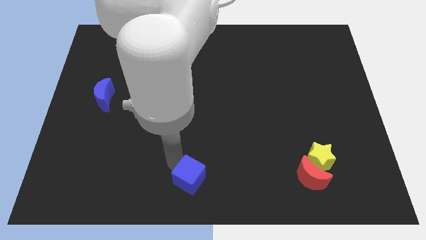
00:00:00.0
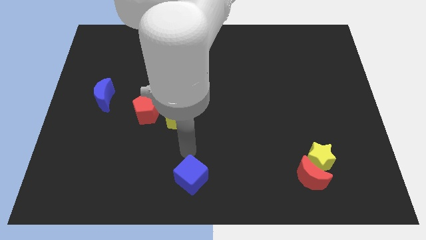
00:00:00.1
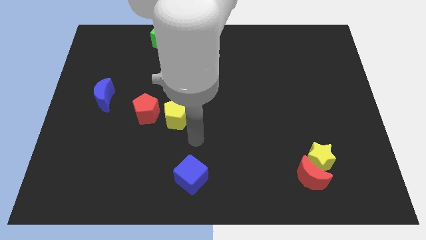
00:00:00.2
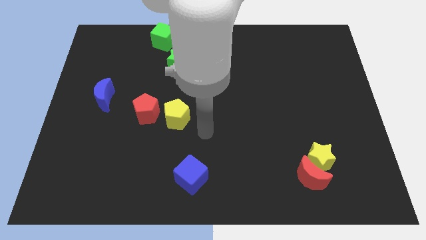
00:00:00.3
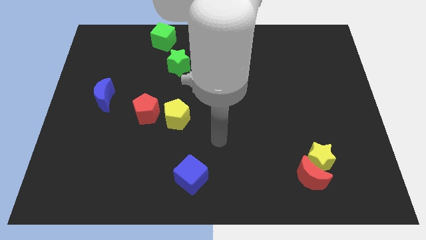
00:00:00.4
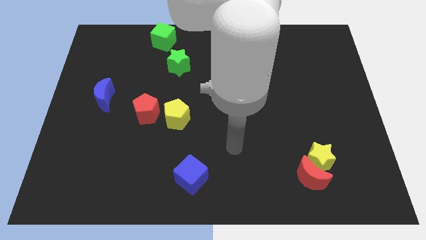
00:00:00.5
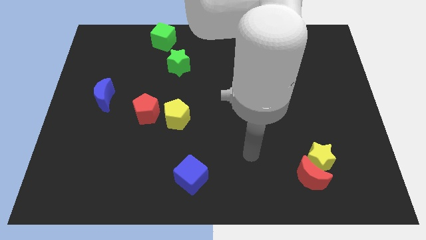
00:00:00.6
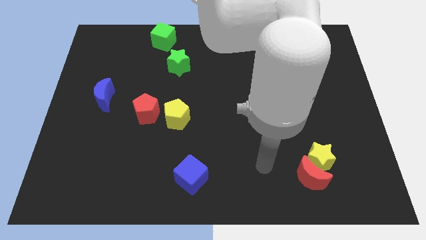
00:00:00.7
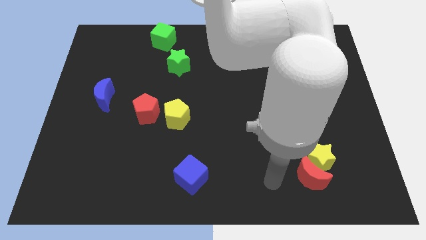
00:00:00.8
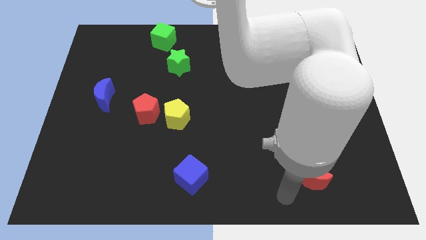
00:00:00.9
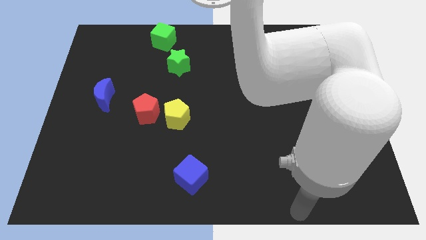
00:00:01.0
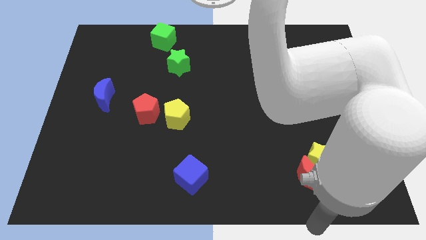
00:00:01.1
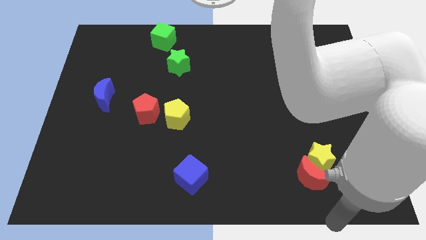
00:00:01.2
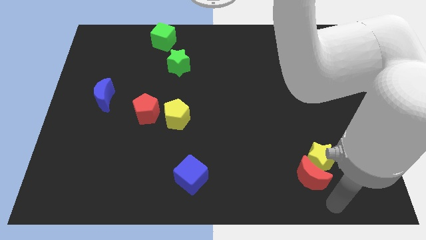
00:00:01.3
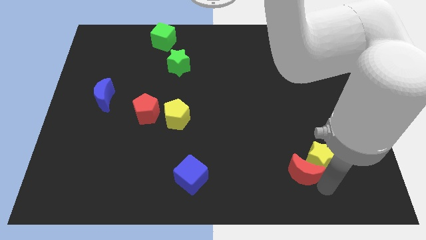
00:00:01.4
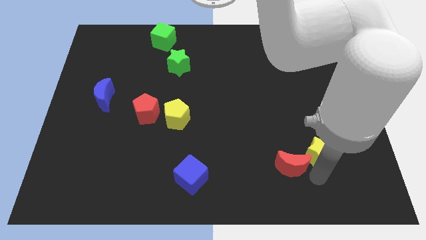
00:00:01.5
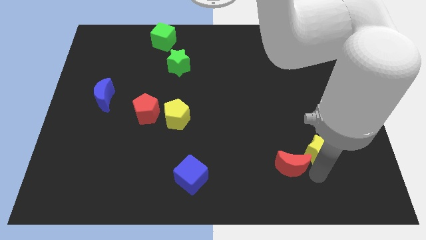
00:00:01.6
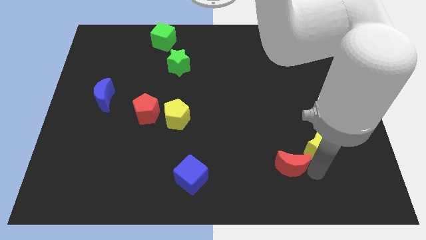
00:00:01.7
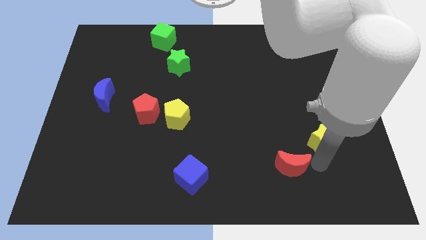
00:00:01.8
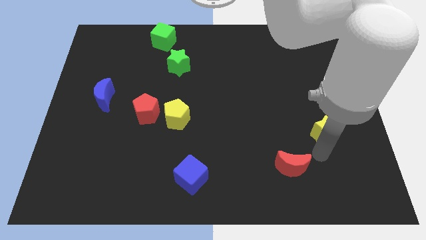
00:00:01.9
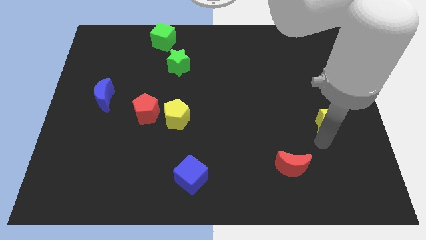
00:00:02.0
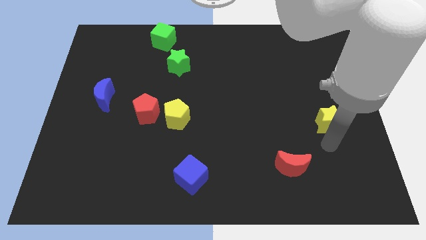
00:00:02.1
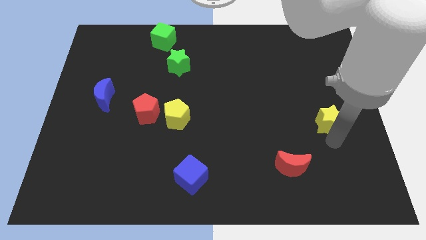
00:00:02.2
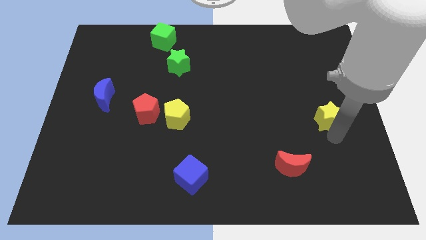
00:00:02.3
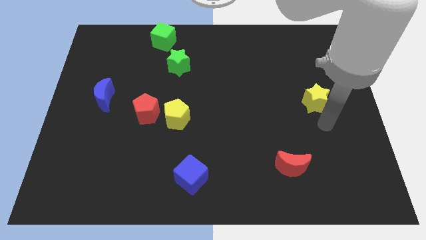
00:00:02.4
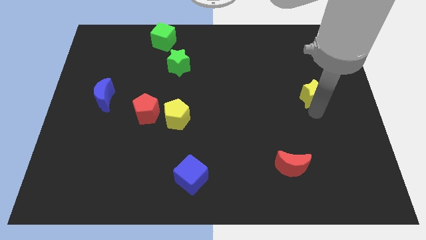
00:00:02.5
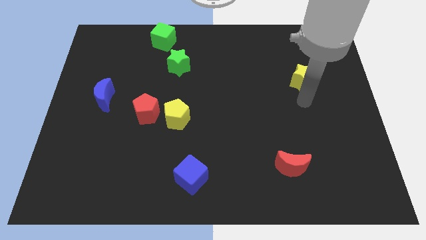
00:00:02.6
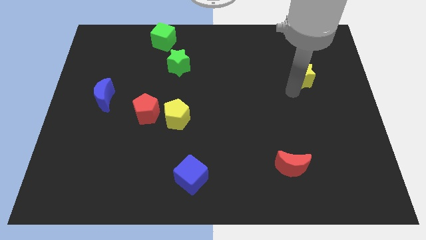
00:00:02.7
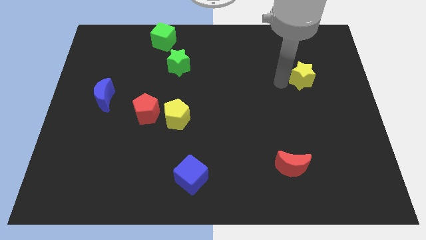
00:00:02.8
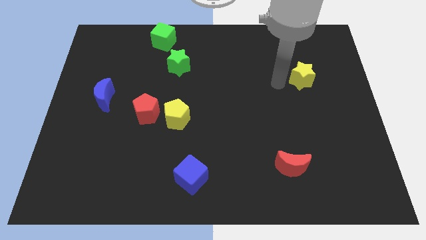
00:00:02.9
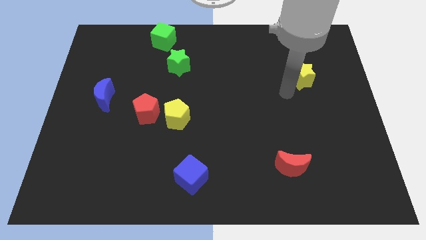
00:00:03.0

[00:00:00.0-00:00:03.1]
move the yellow star away from the red moon to the top side

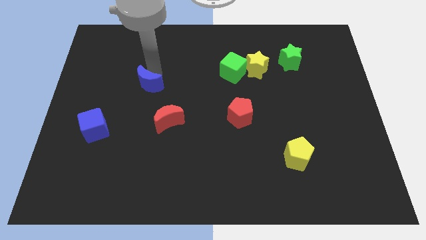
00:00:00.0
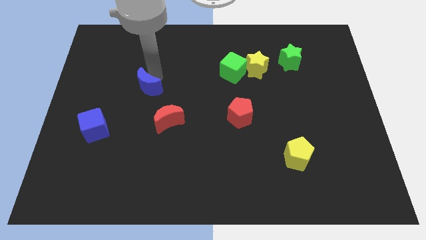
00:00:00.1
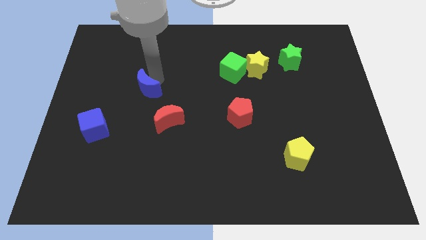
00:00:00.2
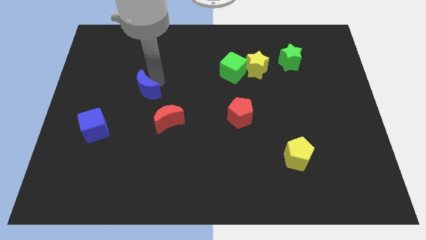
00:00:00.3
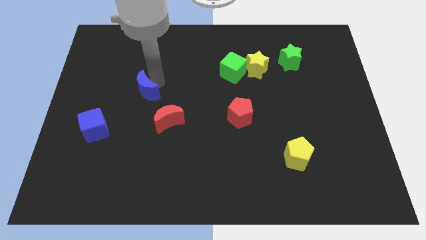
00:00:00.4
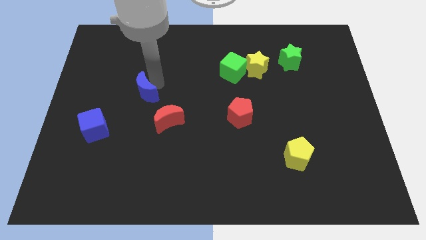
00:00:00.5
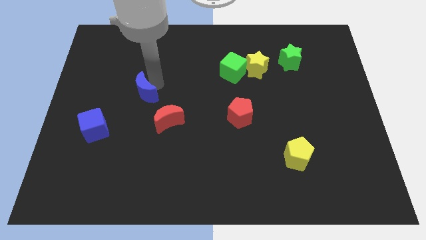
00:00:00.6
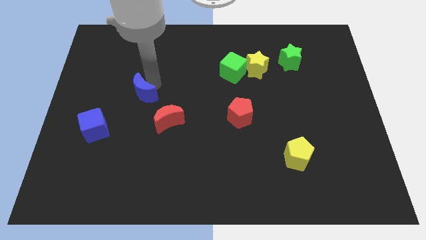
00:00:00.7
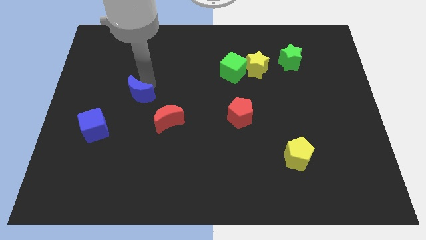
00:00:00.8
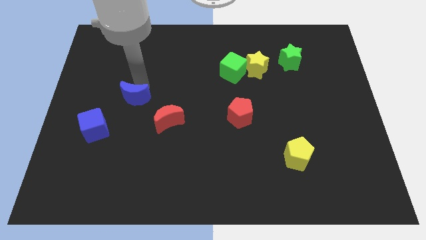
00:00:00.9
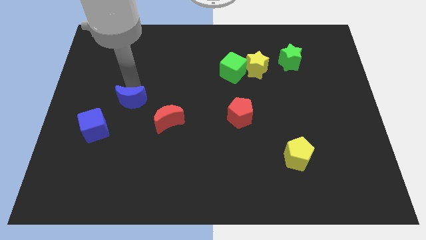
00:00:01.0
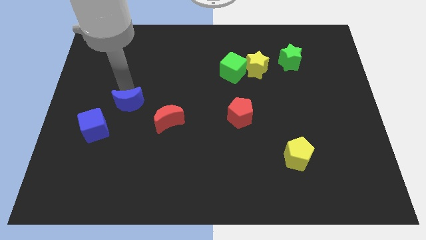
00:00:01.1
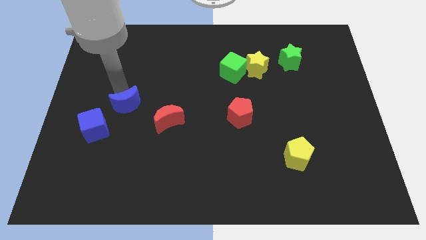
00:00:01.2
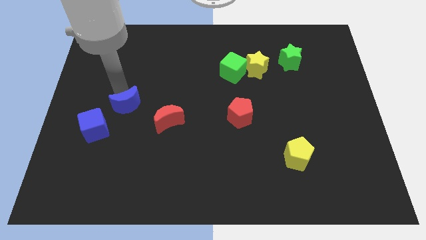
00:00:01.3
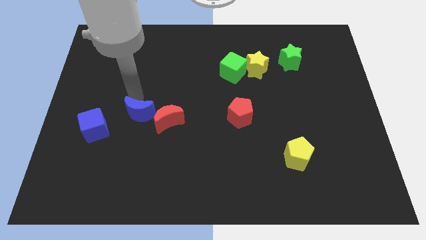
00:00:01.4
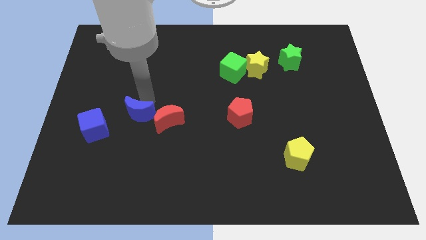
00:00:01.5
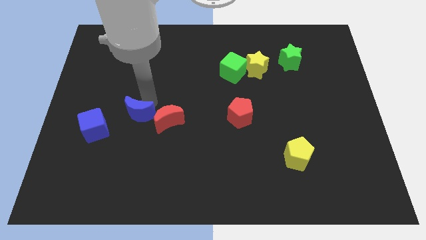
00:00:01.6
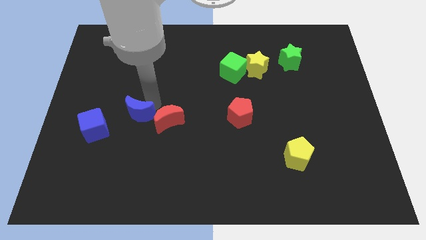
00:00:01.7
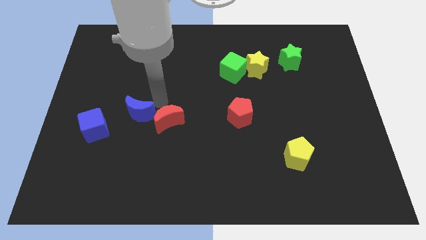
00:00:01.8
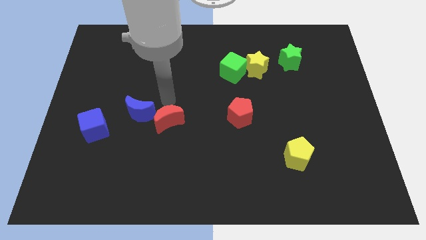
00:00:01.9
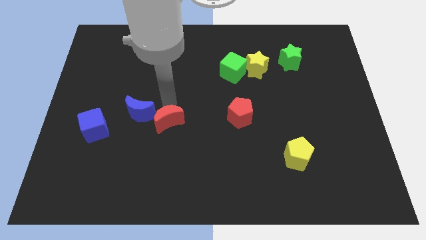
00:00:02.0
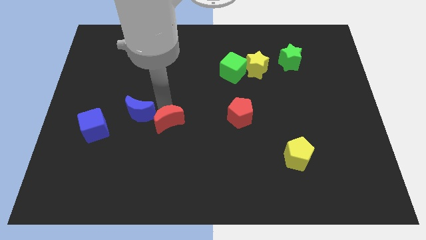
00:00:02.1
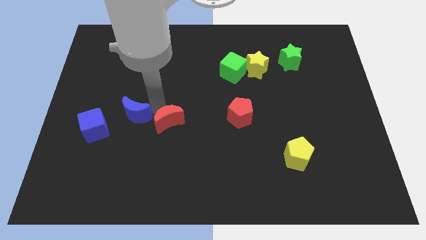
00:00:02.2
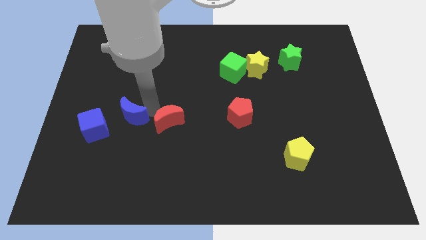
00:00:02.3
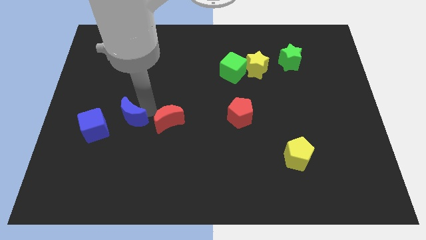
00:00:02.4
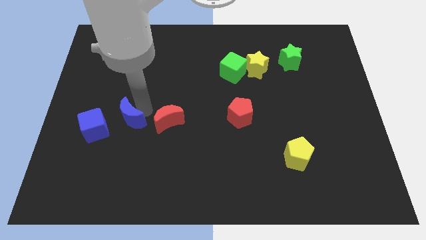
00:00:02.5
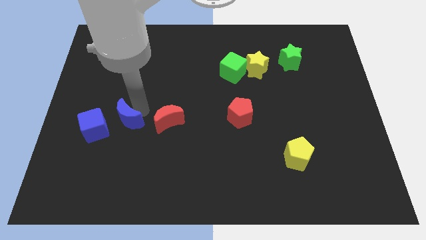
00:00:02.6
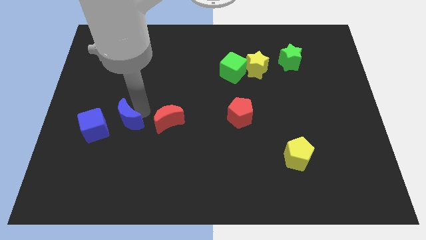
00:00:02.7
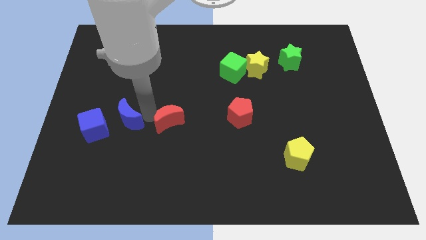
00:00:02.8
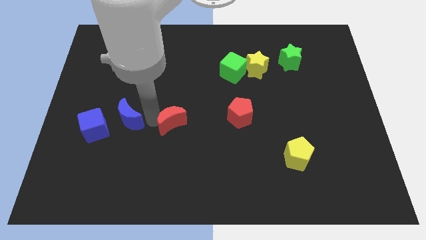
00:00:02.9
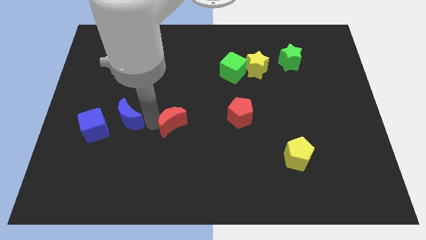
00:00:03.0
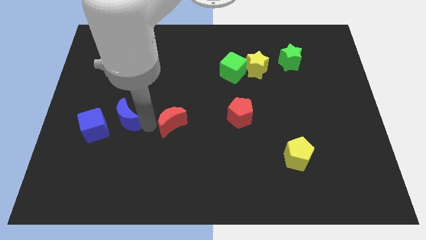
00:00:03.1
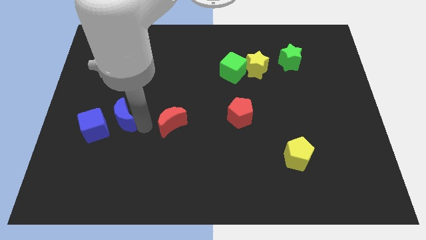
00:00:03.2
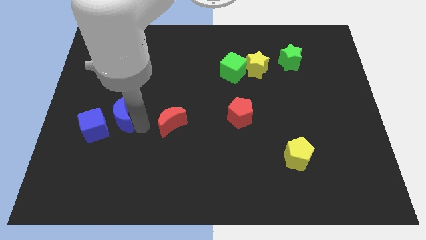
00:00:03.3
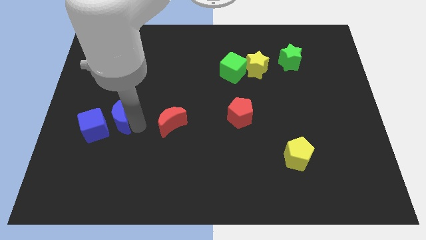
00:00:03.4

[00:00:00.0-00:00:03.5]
move the blue crescent to the right of the blue cube

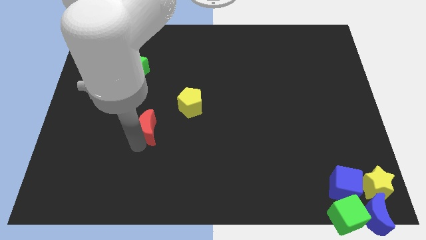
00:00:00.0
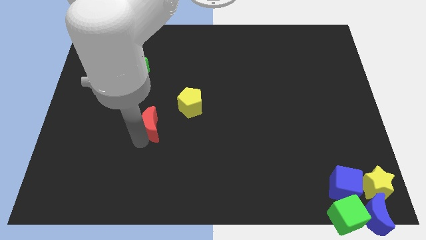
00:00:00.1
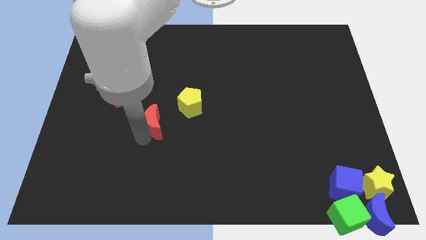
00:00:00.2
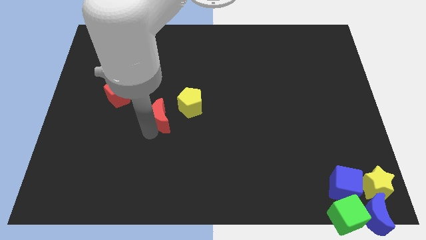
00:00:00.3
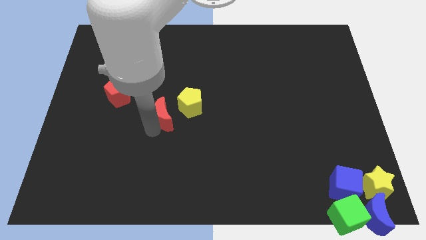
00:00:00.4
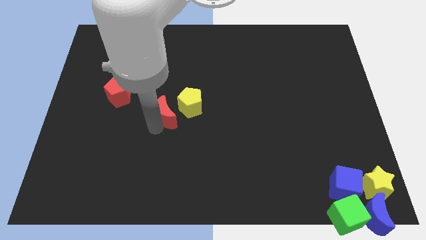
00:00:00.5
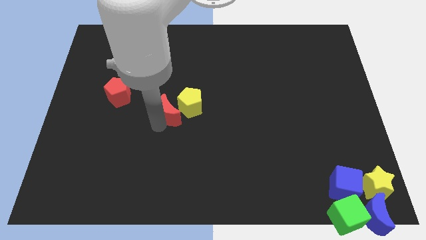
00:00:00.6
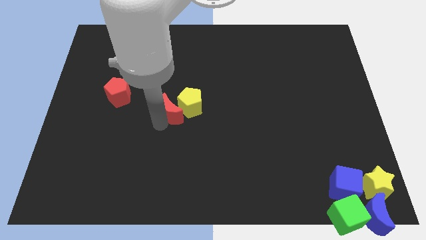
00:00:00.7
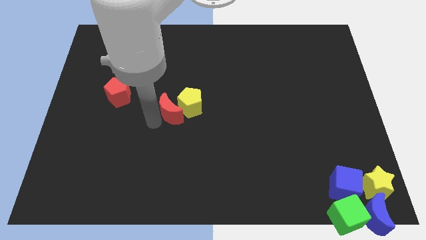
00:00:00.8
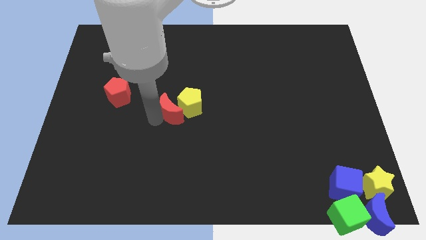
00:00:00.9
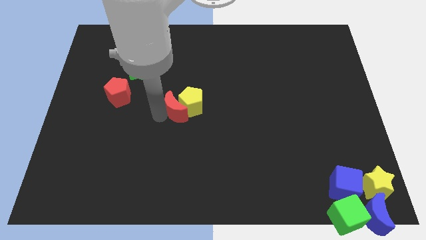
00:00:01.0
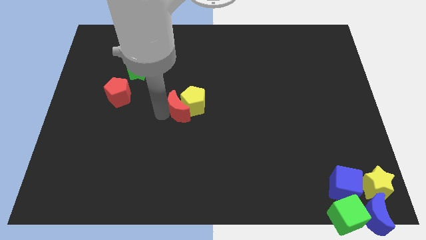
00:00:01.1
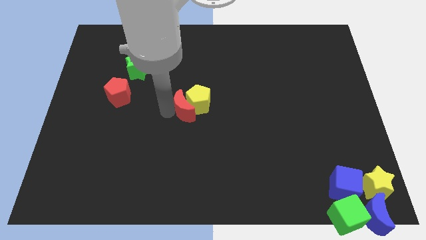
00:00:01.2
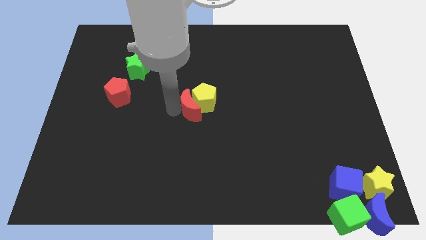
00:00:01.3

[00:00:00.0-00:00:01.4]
push the red crescent into the yellow pentagon

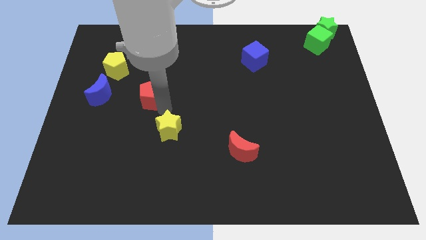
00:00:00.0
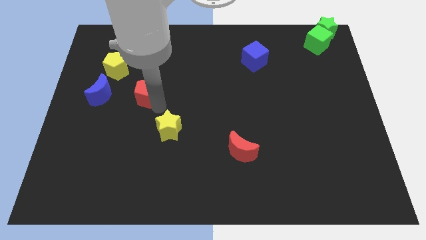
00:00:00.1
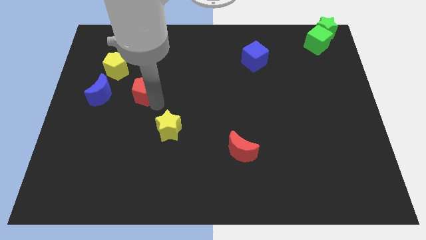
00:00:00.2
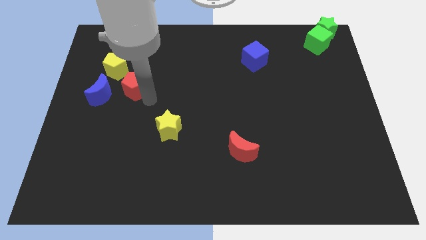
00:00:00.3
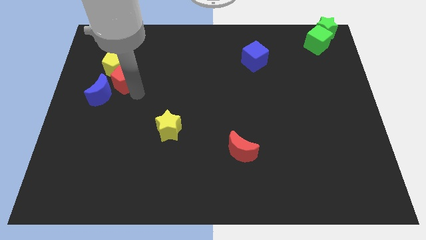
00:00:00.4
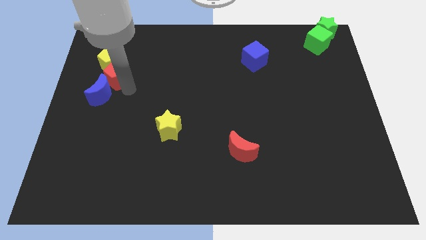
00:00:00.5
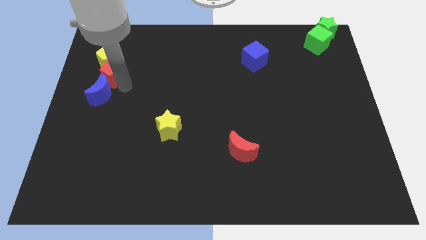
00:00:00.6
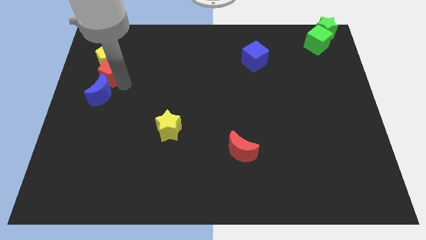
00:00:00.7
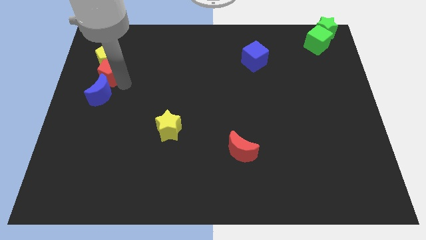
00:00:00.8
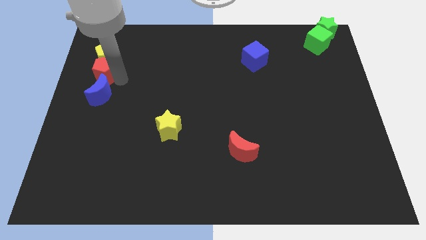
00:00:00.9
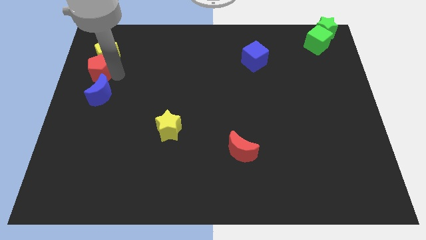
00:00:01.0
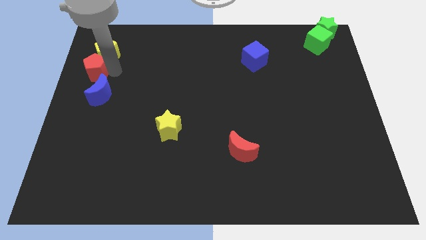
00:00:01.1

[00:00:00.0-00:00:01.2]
push the red pentagon to the bottom of the yellow pentagon
